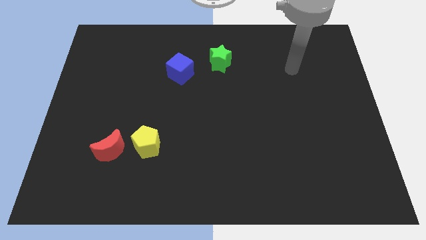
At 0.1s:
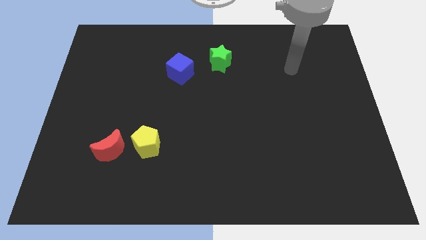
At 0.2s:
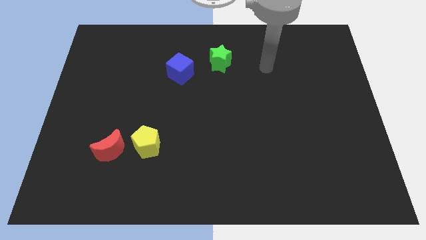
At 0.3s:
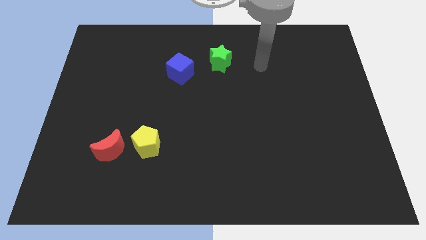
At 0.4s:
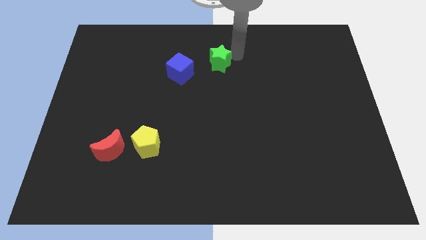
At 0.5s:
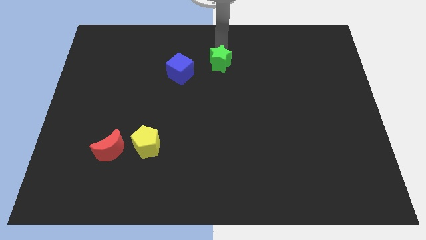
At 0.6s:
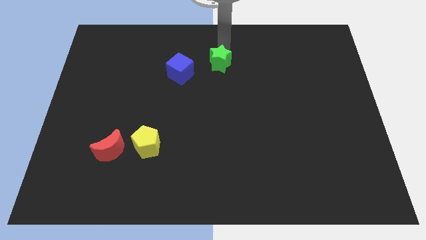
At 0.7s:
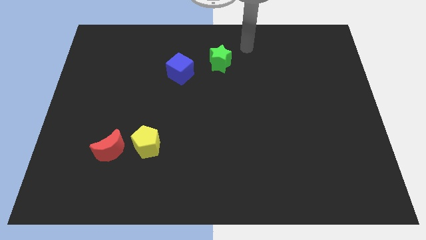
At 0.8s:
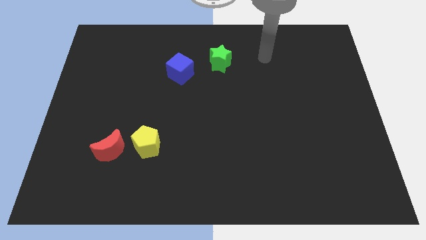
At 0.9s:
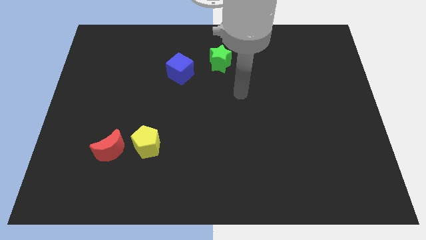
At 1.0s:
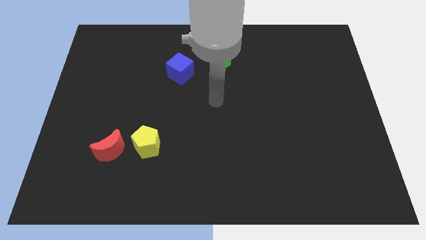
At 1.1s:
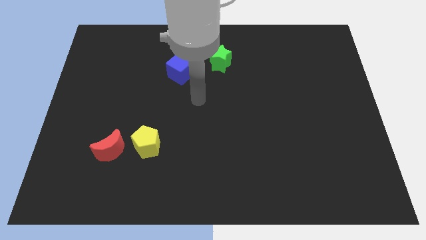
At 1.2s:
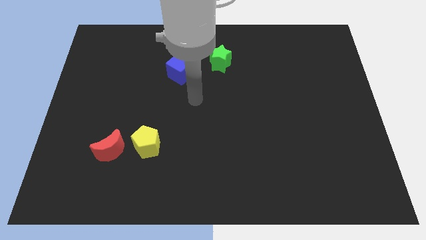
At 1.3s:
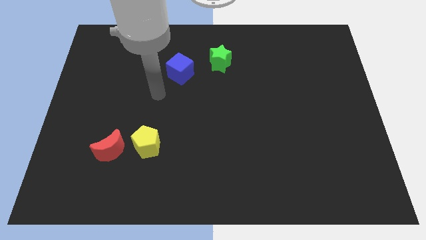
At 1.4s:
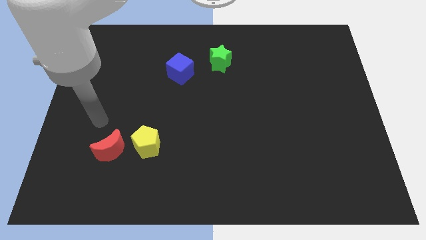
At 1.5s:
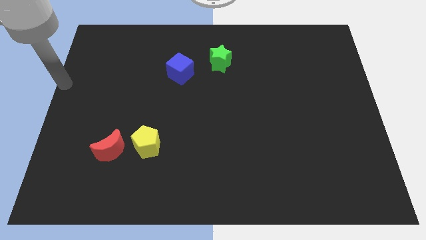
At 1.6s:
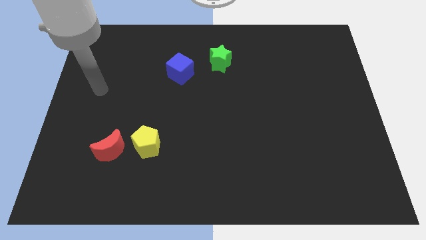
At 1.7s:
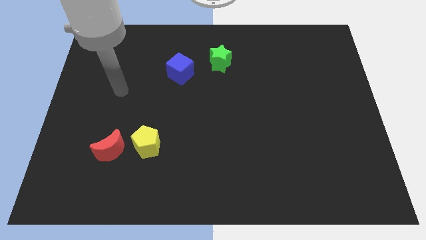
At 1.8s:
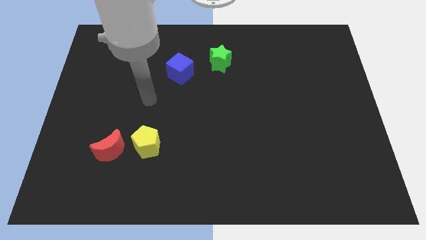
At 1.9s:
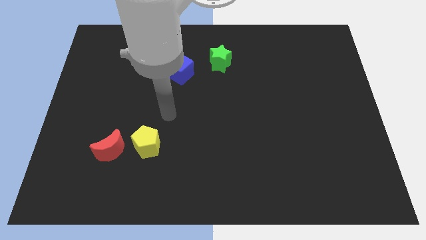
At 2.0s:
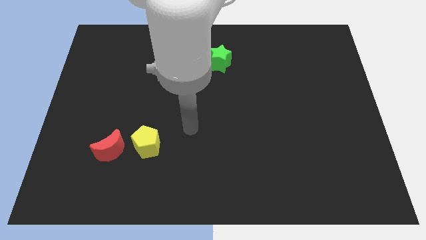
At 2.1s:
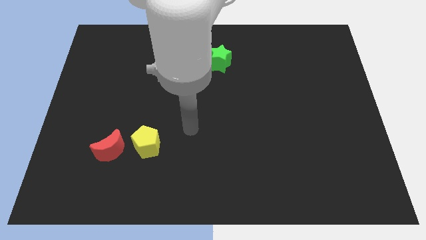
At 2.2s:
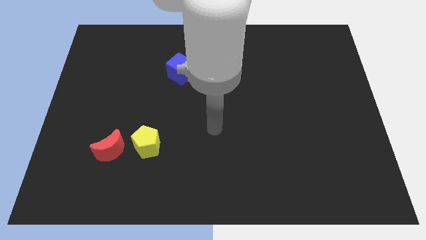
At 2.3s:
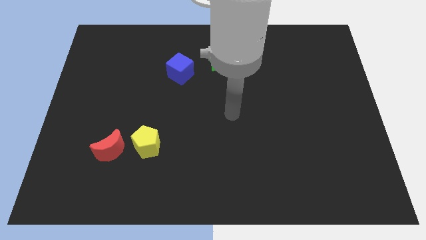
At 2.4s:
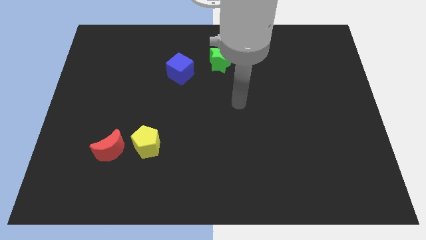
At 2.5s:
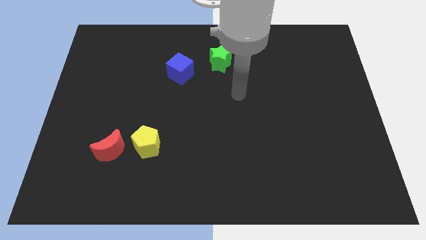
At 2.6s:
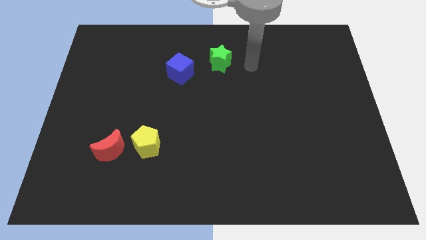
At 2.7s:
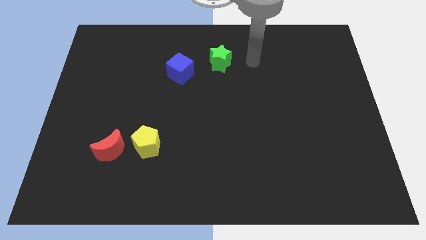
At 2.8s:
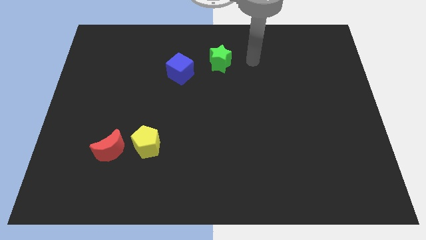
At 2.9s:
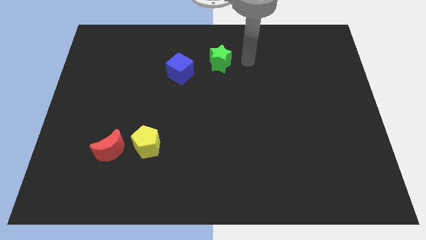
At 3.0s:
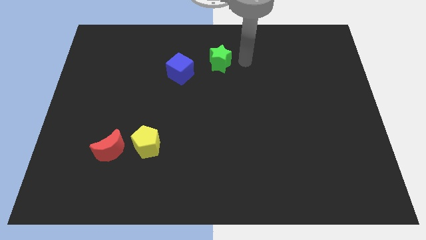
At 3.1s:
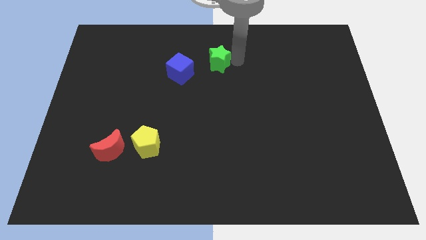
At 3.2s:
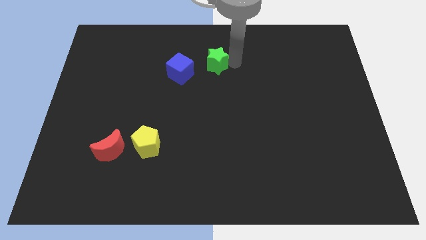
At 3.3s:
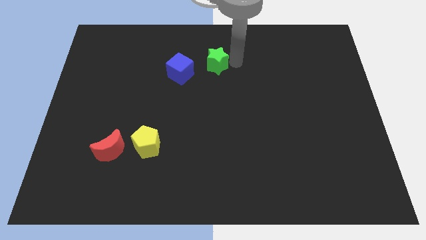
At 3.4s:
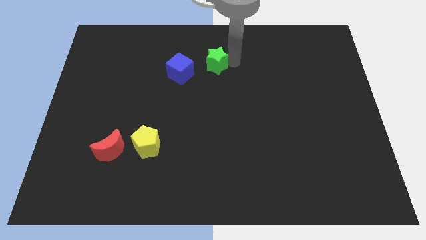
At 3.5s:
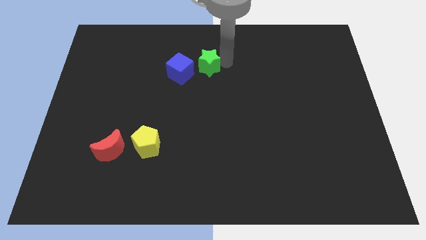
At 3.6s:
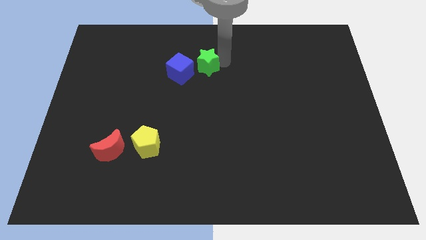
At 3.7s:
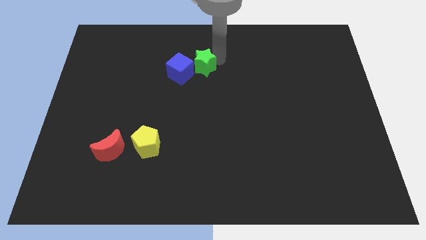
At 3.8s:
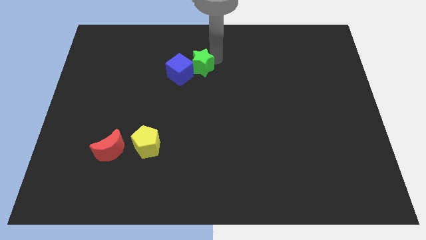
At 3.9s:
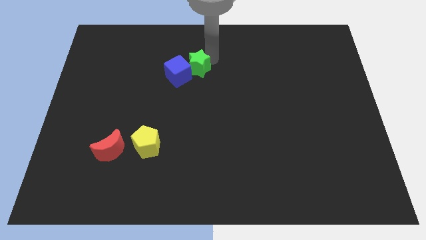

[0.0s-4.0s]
put the green star close to the cube

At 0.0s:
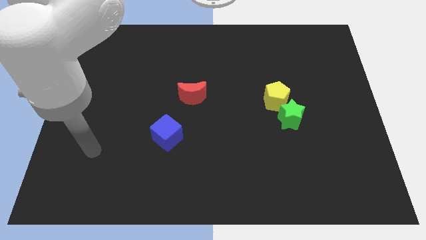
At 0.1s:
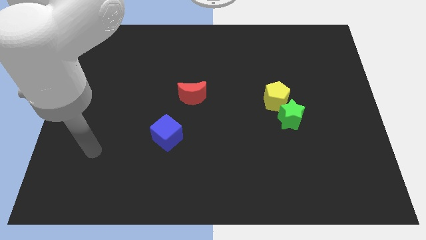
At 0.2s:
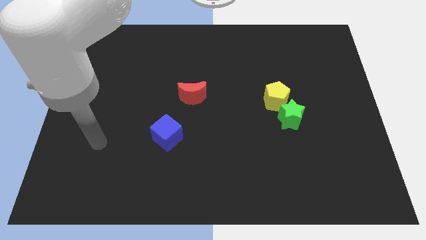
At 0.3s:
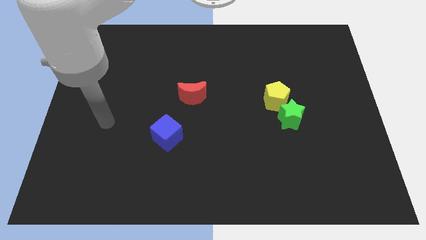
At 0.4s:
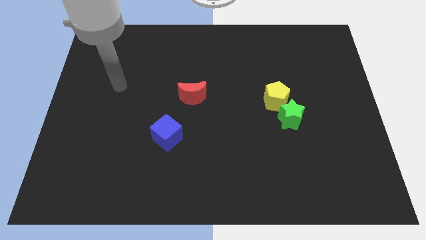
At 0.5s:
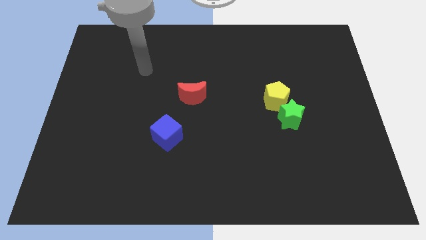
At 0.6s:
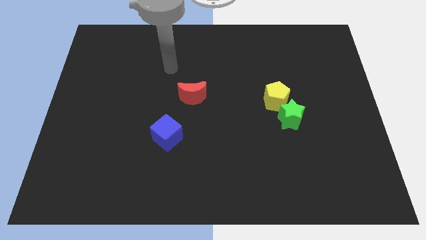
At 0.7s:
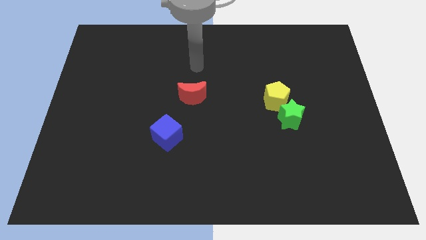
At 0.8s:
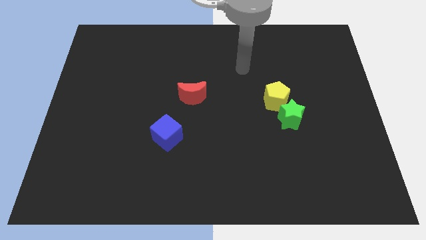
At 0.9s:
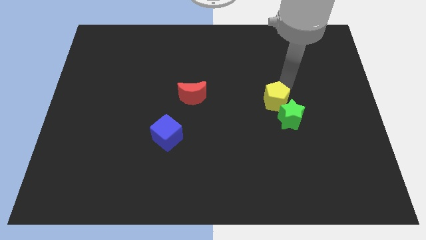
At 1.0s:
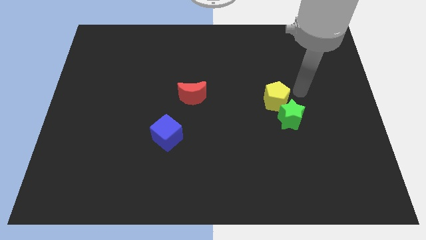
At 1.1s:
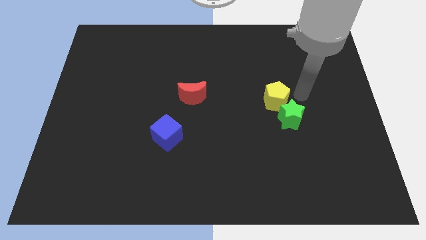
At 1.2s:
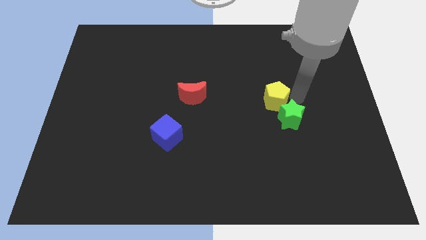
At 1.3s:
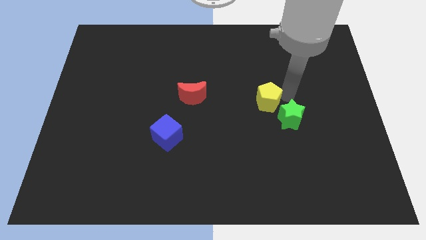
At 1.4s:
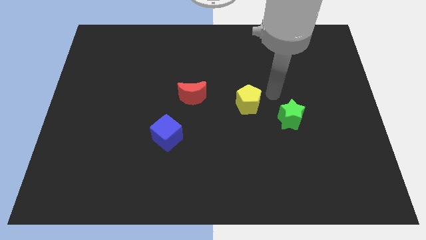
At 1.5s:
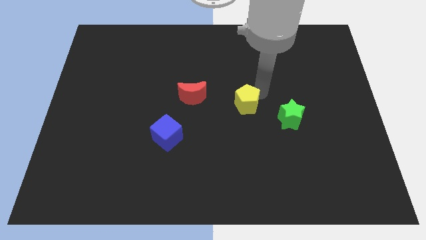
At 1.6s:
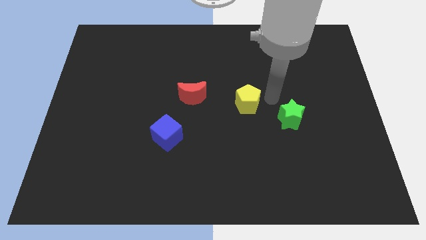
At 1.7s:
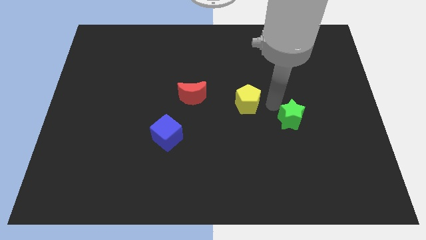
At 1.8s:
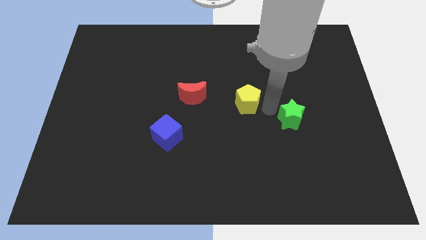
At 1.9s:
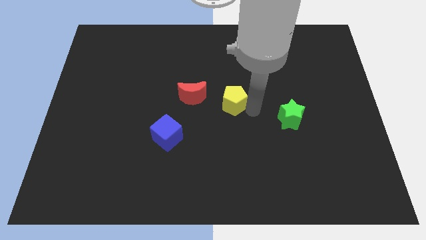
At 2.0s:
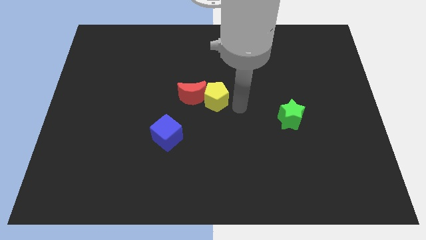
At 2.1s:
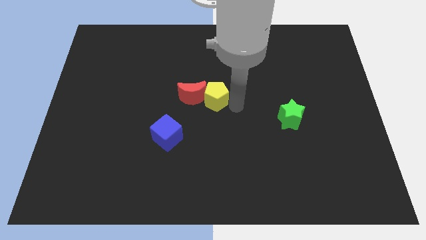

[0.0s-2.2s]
move the yellow pentagon towards the moon

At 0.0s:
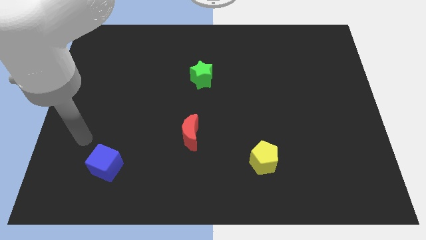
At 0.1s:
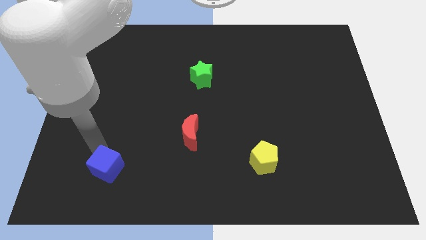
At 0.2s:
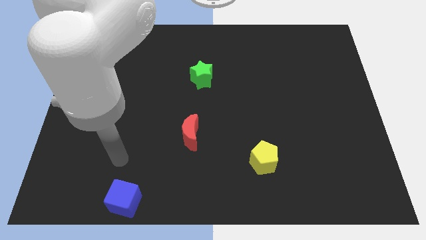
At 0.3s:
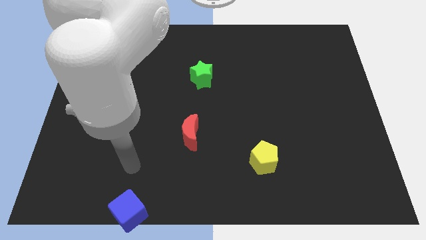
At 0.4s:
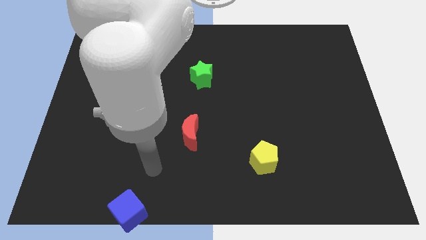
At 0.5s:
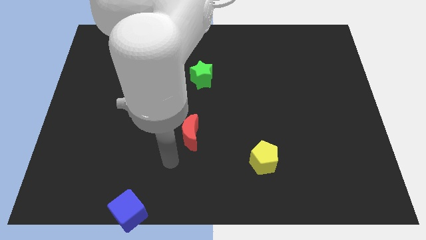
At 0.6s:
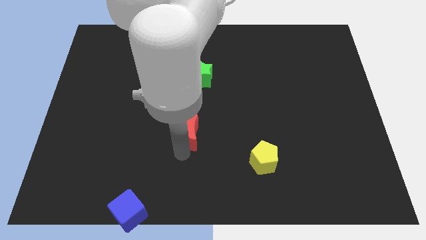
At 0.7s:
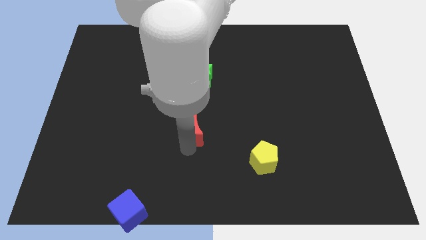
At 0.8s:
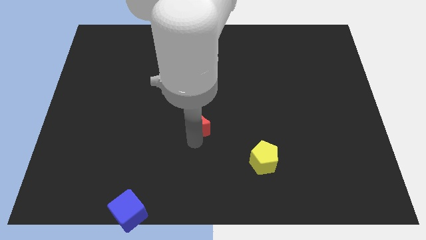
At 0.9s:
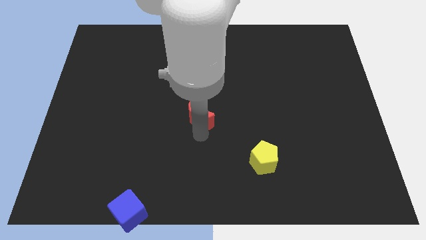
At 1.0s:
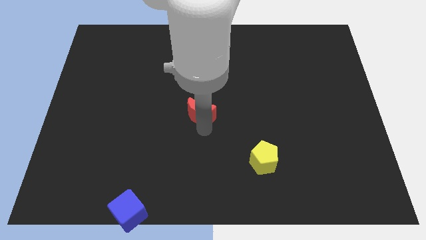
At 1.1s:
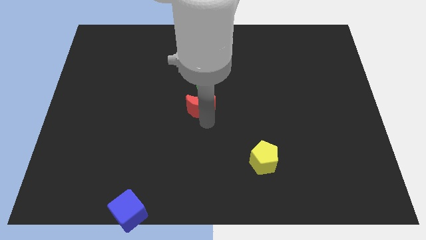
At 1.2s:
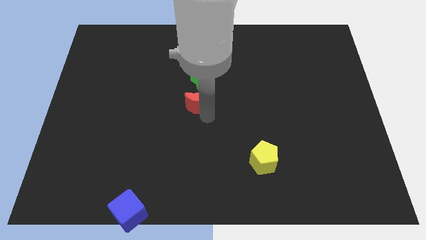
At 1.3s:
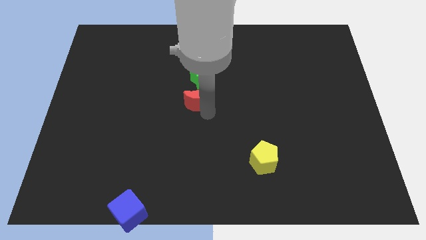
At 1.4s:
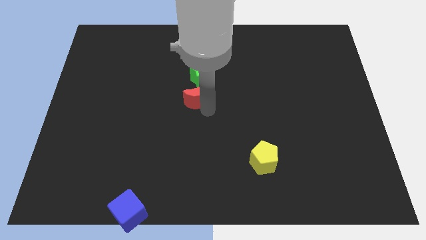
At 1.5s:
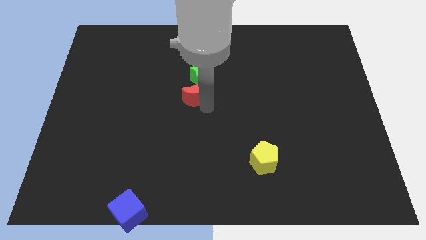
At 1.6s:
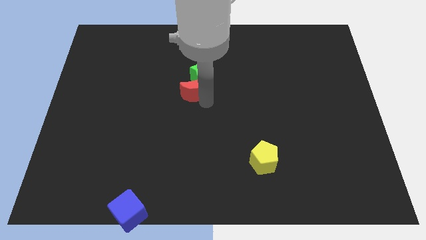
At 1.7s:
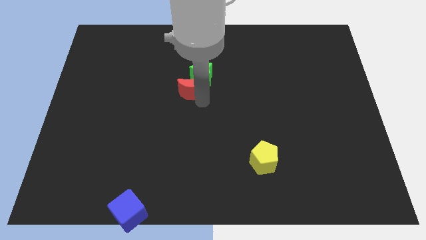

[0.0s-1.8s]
push the red block to the green block

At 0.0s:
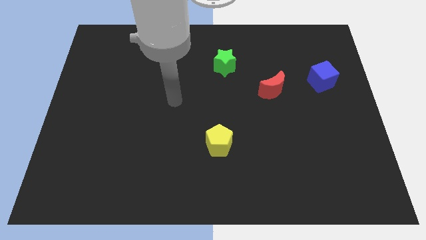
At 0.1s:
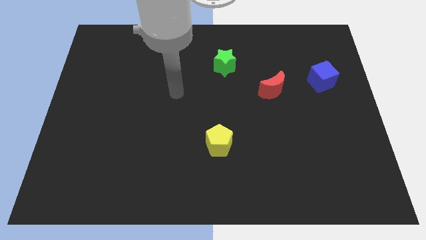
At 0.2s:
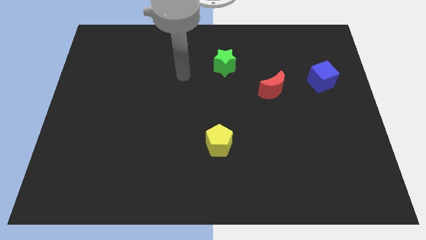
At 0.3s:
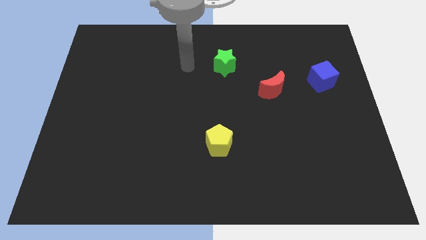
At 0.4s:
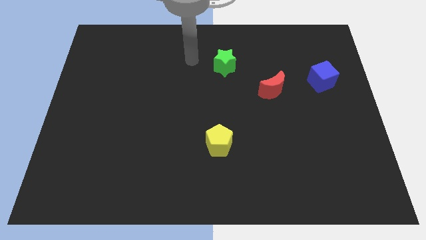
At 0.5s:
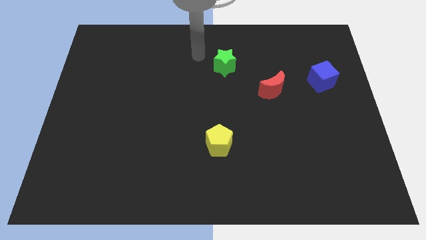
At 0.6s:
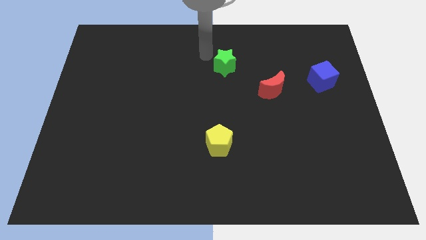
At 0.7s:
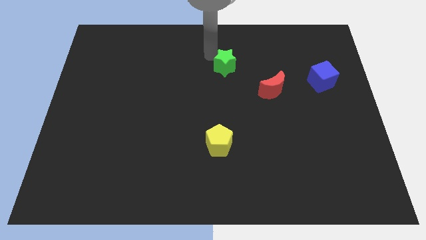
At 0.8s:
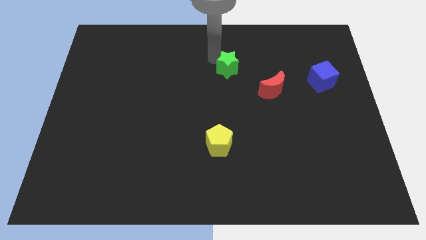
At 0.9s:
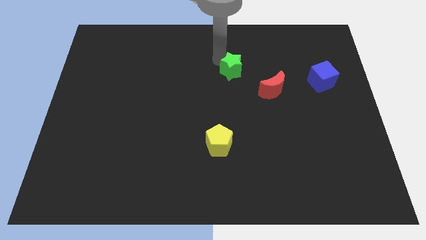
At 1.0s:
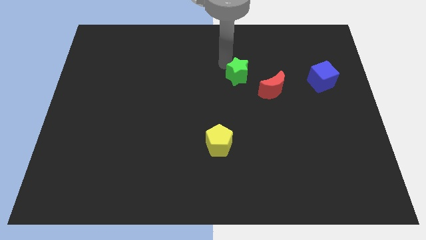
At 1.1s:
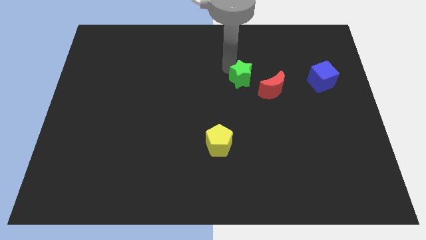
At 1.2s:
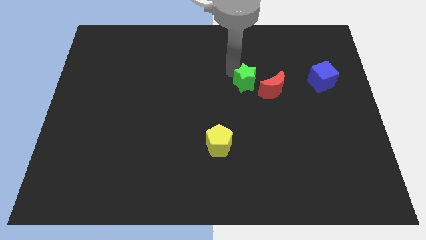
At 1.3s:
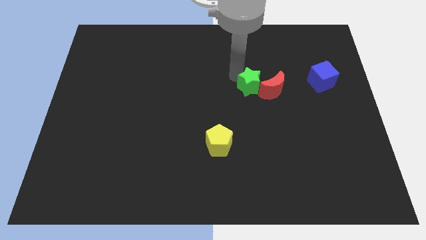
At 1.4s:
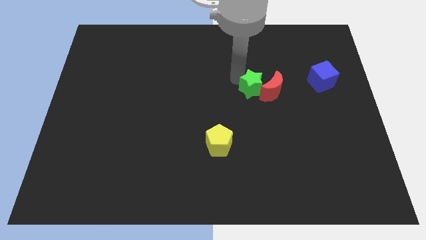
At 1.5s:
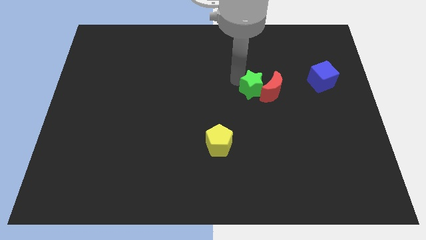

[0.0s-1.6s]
put the green star towards the red block
